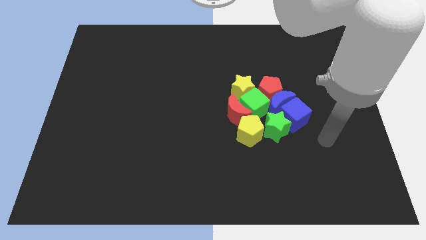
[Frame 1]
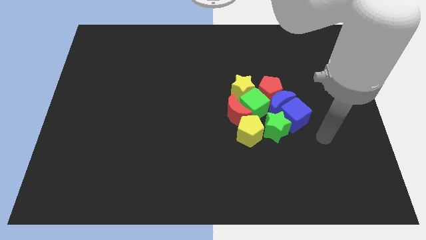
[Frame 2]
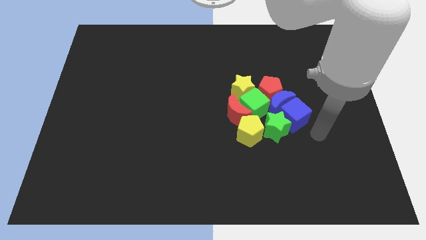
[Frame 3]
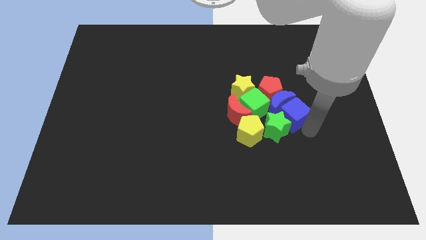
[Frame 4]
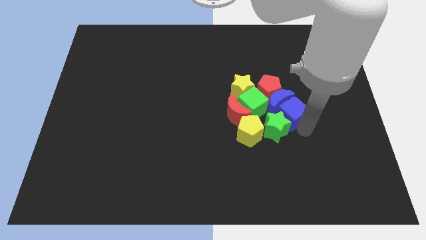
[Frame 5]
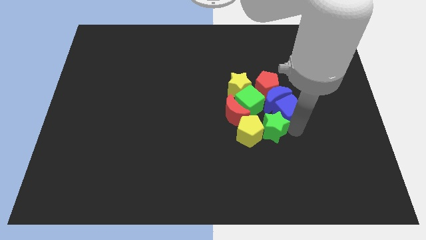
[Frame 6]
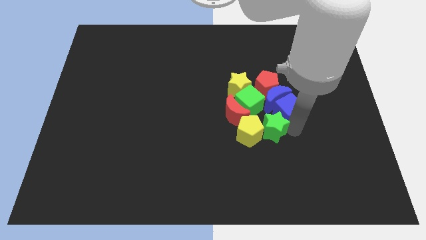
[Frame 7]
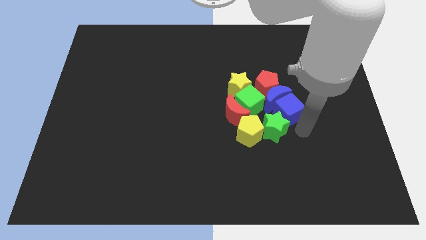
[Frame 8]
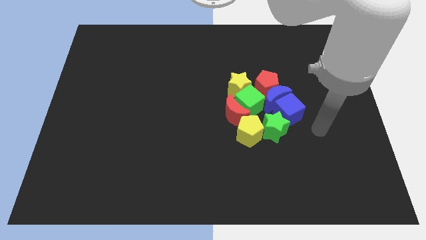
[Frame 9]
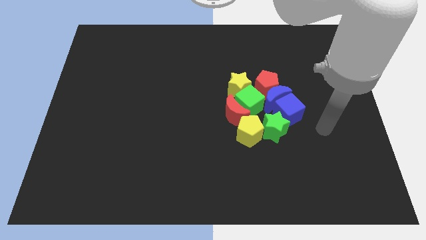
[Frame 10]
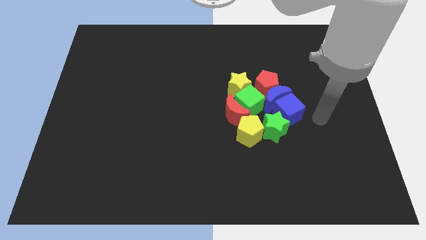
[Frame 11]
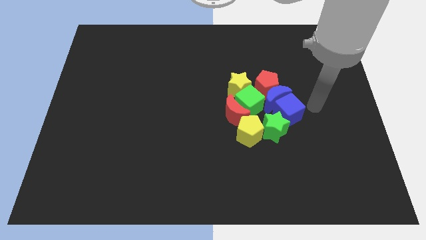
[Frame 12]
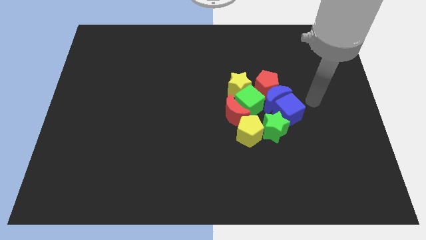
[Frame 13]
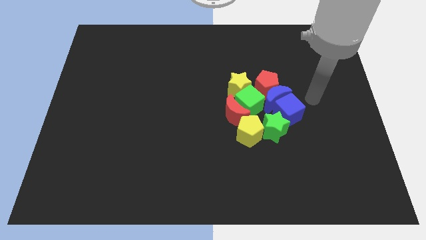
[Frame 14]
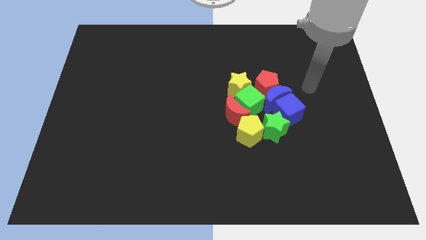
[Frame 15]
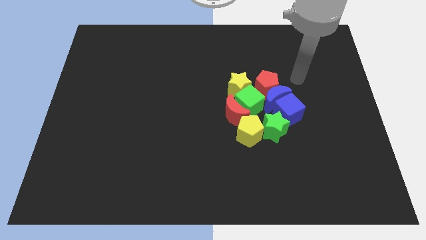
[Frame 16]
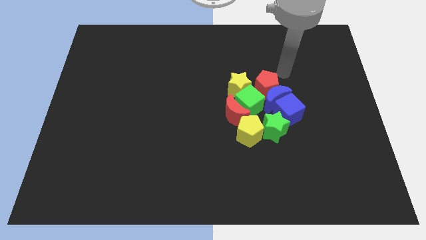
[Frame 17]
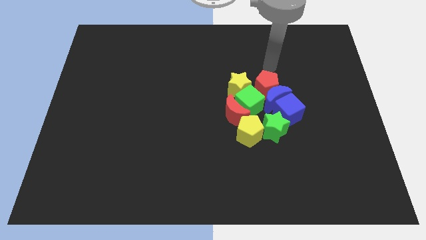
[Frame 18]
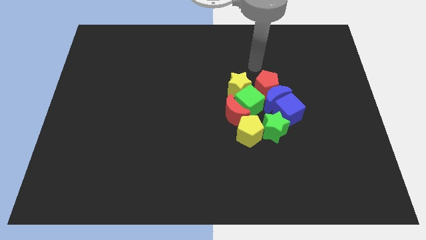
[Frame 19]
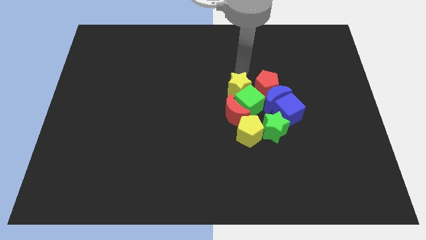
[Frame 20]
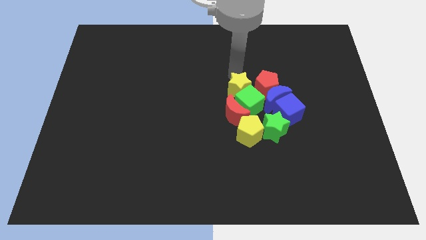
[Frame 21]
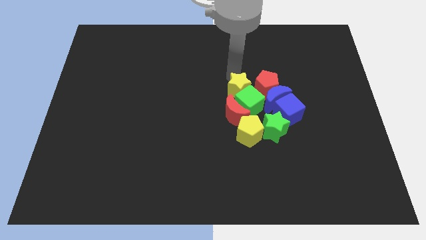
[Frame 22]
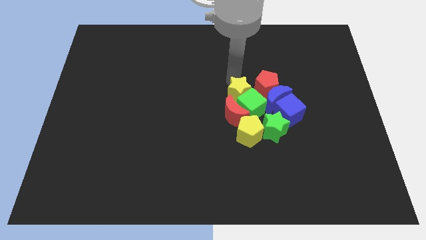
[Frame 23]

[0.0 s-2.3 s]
slightly move blue blocks towards top

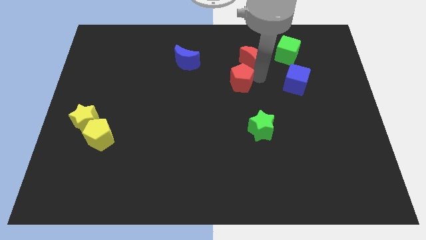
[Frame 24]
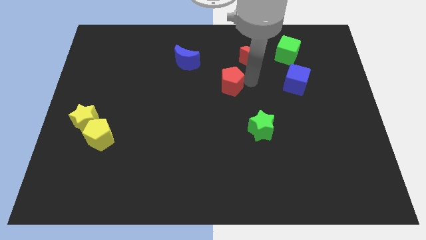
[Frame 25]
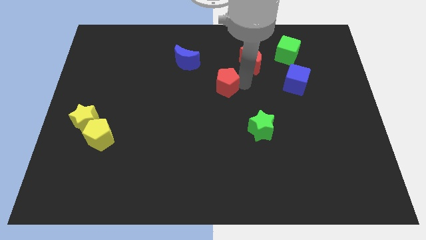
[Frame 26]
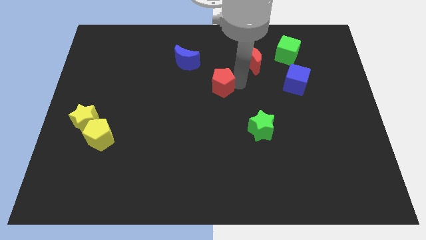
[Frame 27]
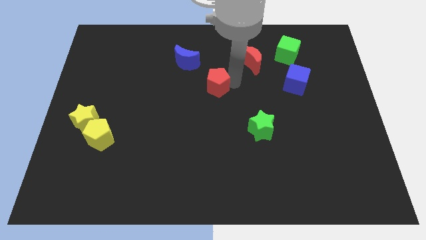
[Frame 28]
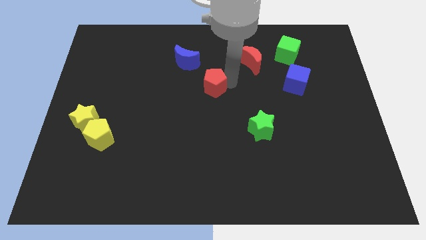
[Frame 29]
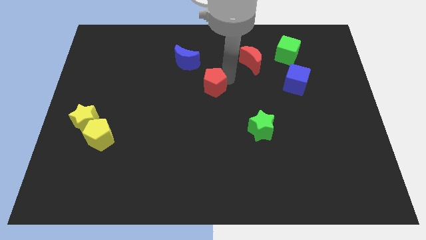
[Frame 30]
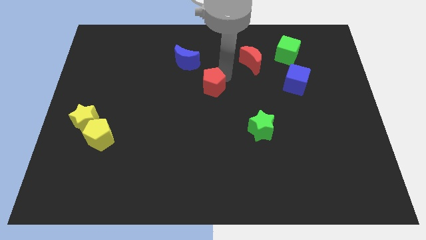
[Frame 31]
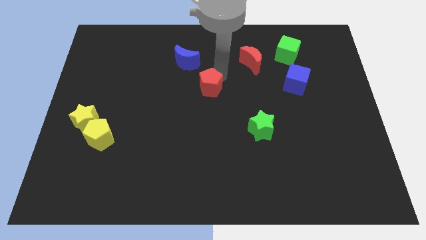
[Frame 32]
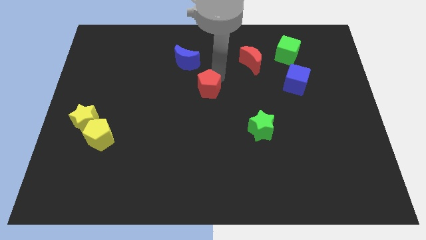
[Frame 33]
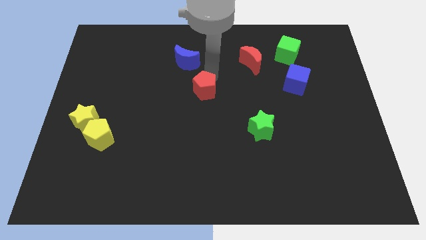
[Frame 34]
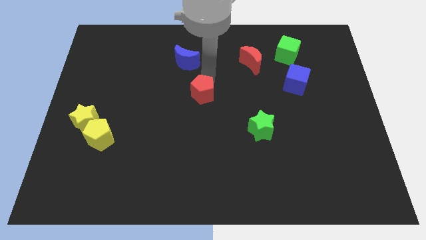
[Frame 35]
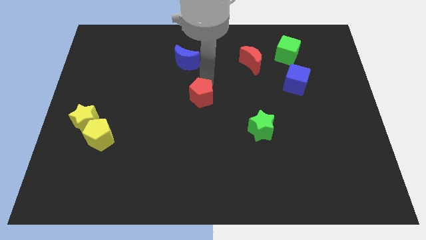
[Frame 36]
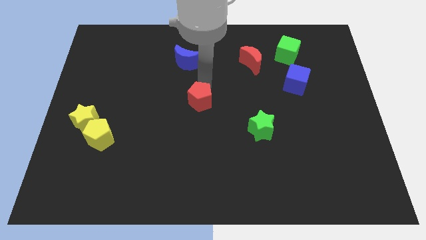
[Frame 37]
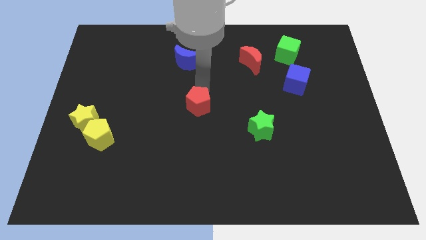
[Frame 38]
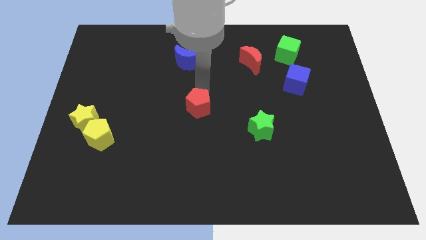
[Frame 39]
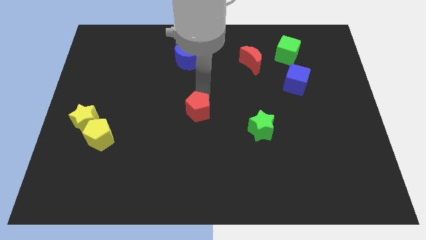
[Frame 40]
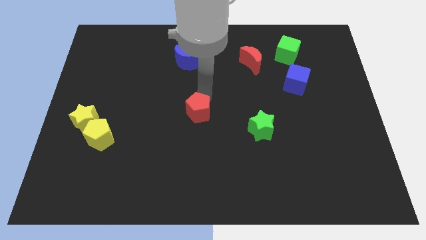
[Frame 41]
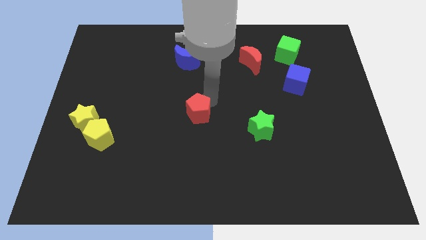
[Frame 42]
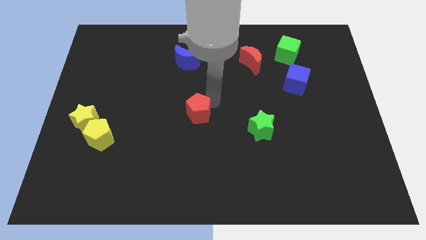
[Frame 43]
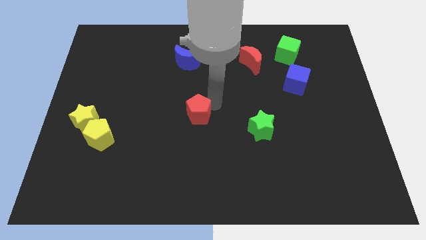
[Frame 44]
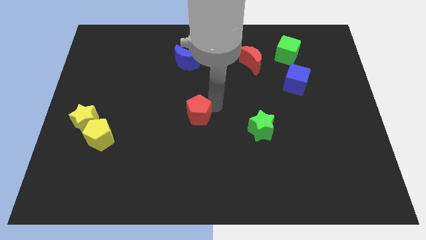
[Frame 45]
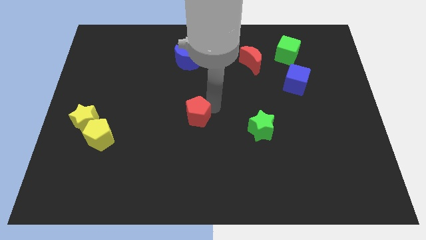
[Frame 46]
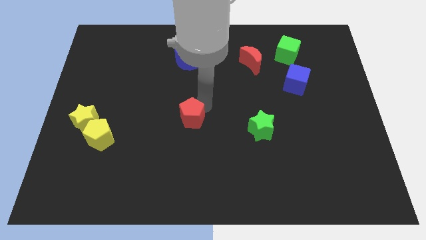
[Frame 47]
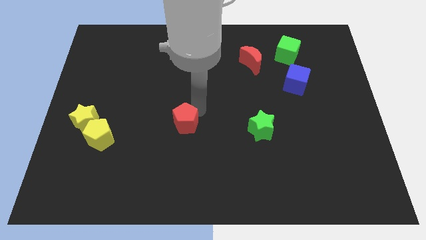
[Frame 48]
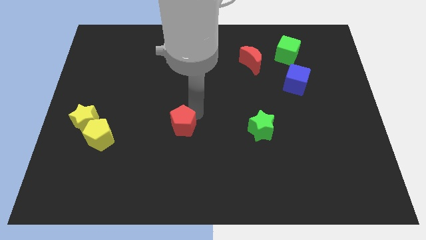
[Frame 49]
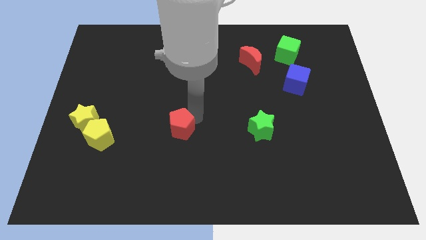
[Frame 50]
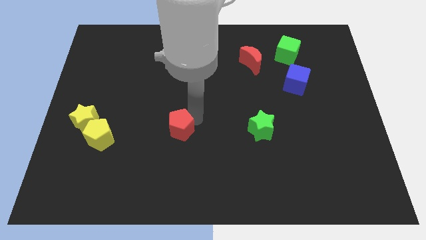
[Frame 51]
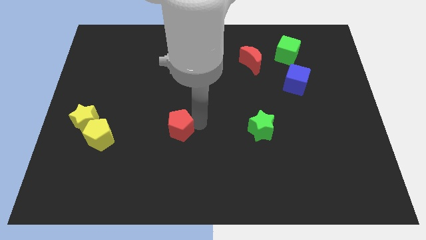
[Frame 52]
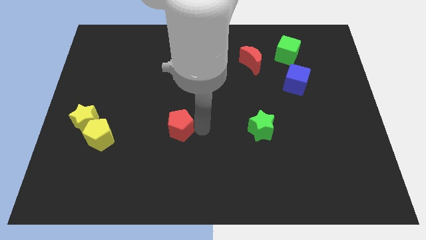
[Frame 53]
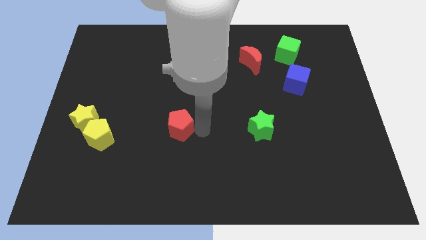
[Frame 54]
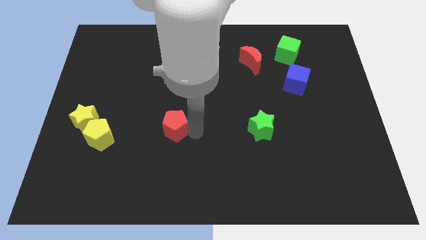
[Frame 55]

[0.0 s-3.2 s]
move the red pentagon horizontal to the green star on the left side

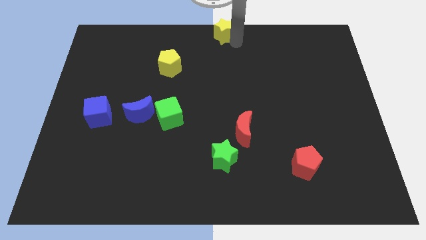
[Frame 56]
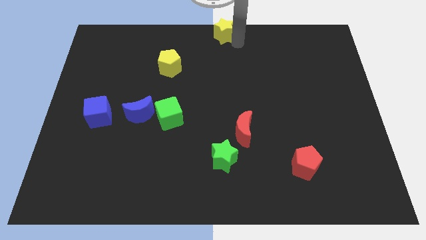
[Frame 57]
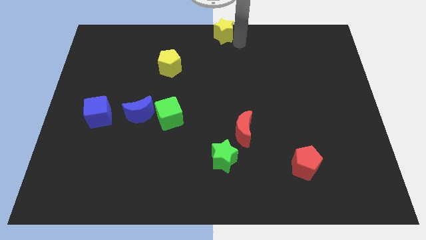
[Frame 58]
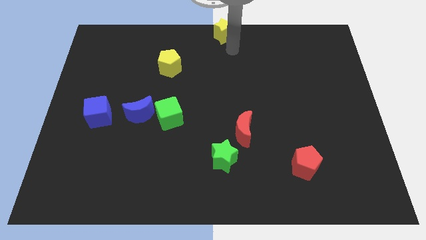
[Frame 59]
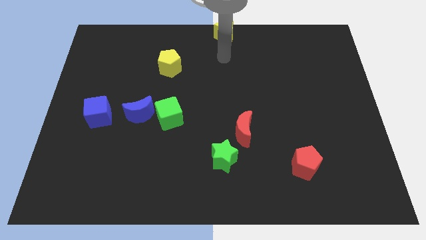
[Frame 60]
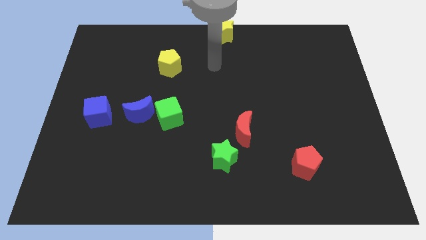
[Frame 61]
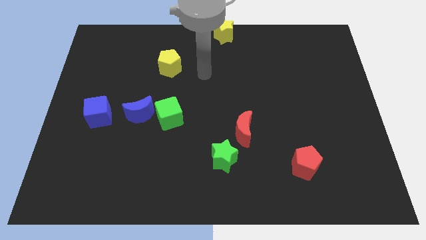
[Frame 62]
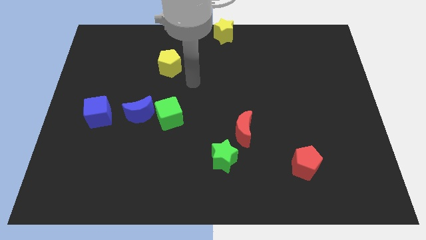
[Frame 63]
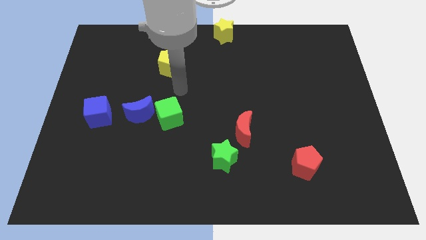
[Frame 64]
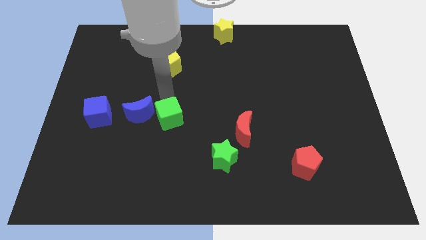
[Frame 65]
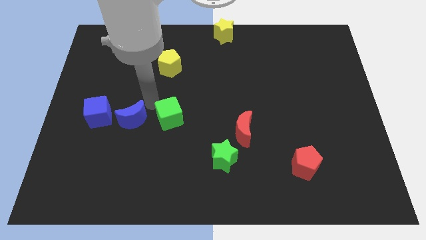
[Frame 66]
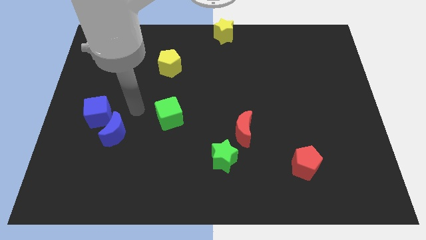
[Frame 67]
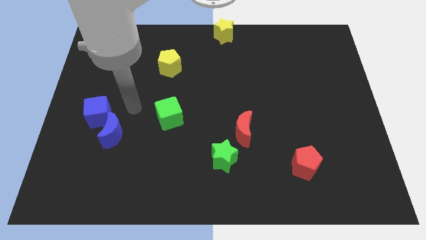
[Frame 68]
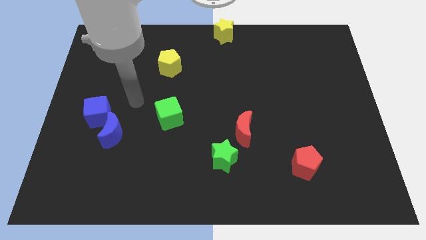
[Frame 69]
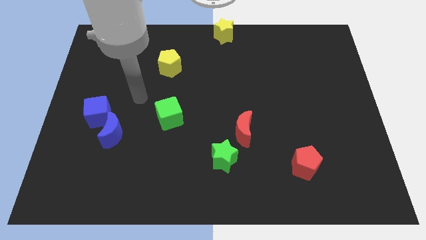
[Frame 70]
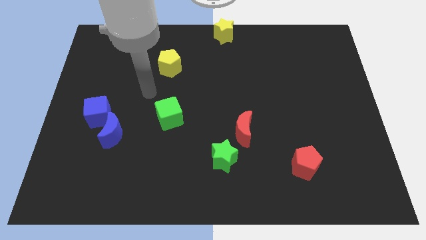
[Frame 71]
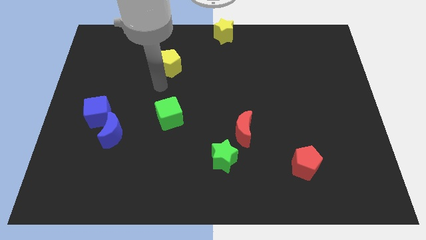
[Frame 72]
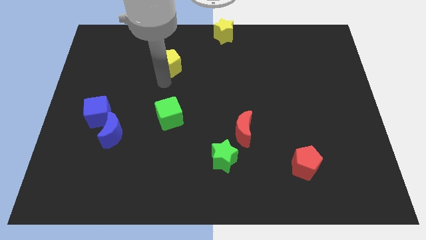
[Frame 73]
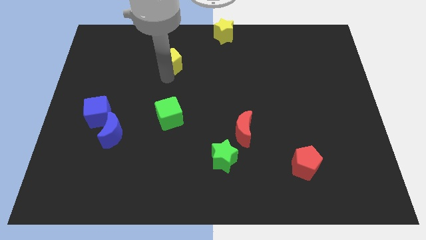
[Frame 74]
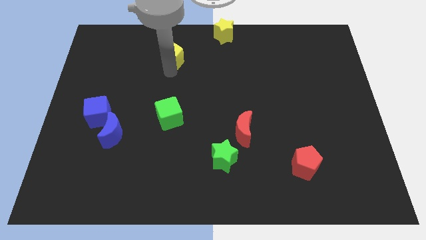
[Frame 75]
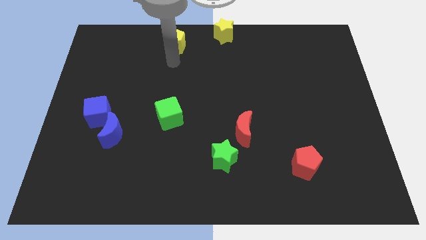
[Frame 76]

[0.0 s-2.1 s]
move yellow pentagon towards top

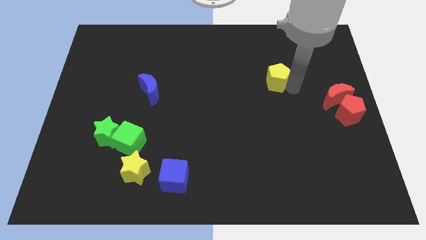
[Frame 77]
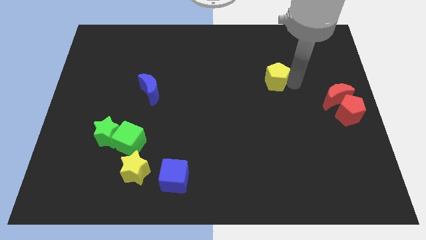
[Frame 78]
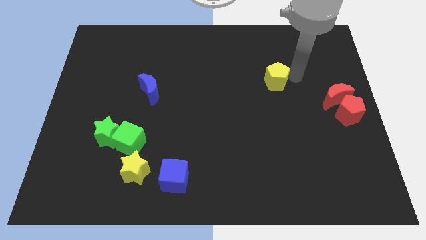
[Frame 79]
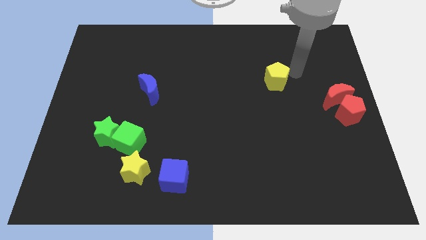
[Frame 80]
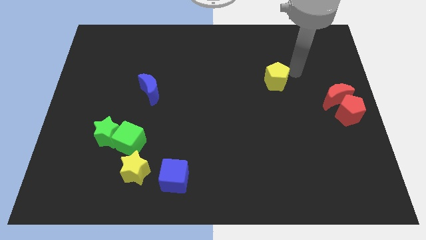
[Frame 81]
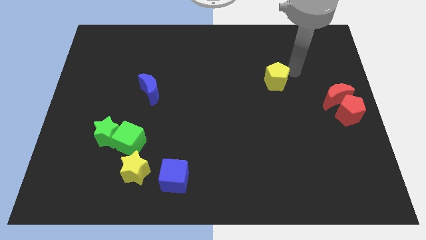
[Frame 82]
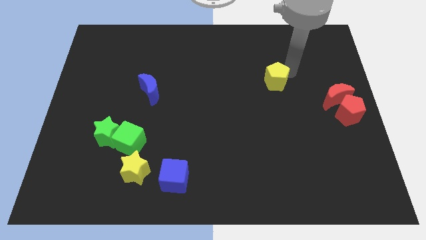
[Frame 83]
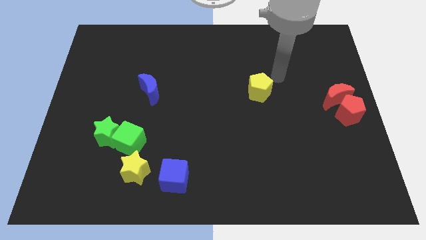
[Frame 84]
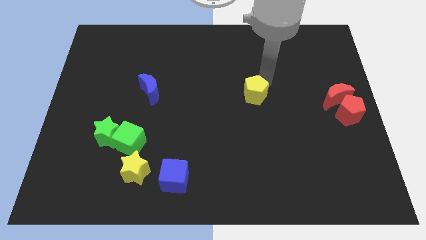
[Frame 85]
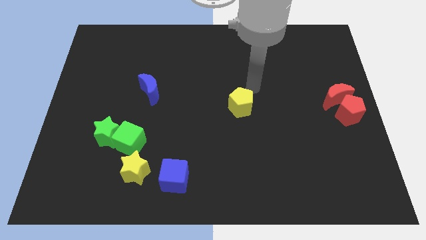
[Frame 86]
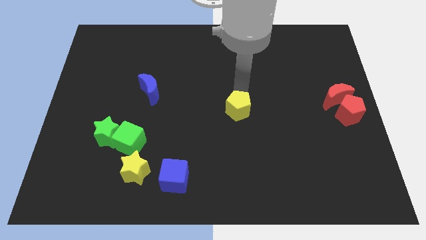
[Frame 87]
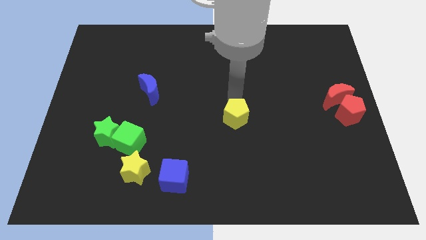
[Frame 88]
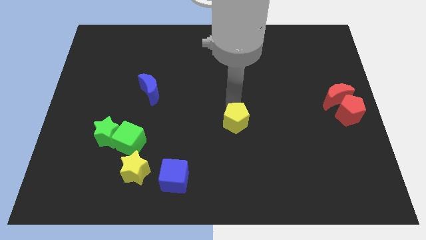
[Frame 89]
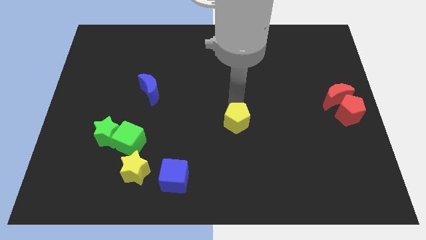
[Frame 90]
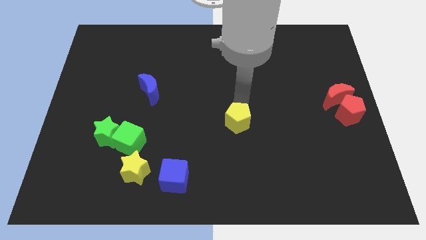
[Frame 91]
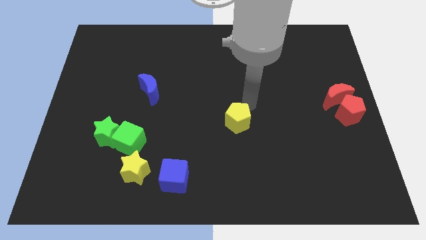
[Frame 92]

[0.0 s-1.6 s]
push the yellow pentagon to the center of the board
